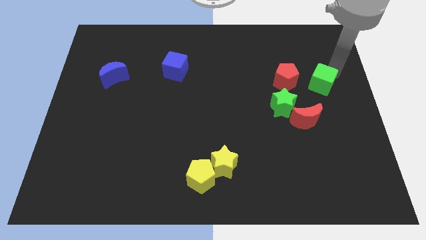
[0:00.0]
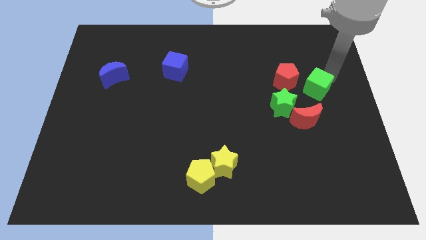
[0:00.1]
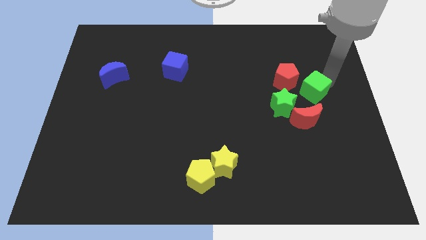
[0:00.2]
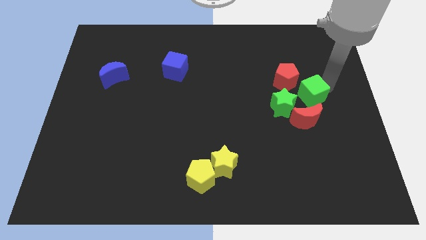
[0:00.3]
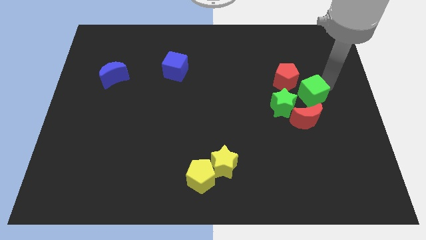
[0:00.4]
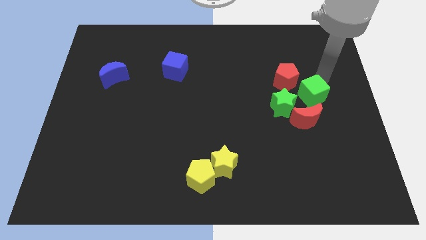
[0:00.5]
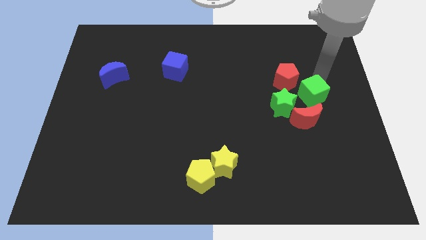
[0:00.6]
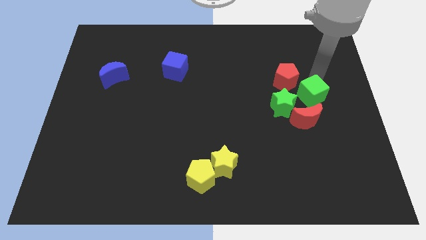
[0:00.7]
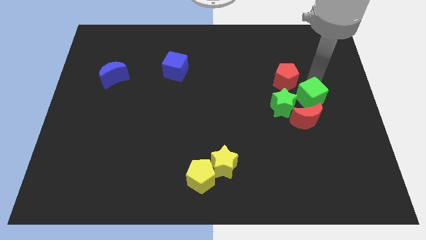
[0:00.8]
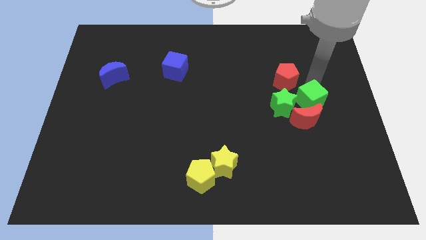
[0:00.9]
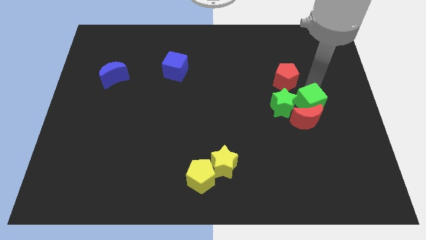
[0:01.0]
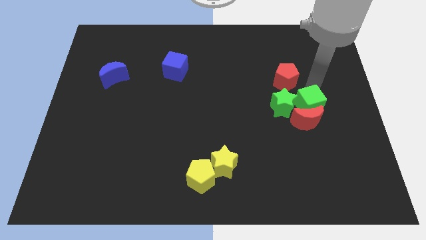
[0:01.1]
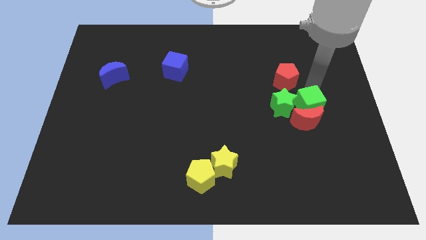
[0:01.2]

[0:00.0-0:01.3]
push the green cube to the right of the green star

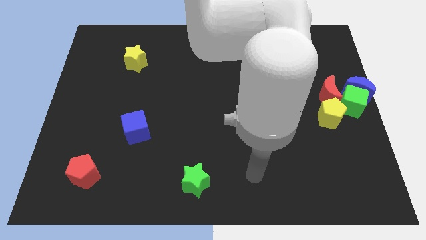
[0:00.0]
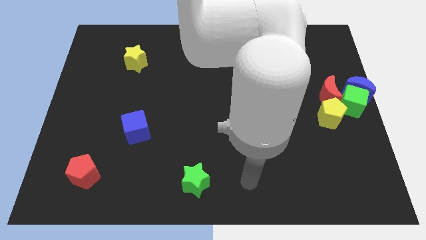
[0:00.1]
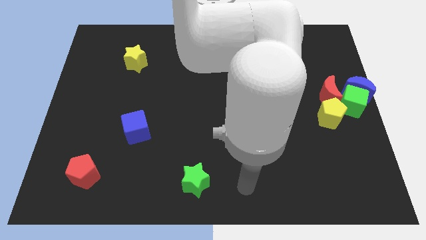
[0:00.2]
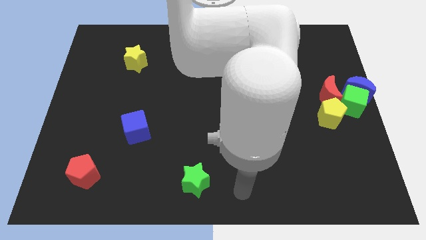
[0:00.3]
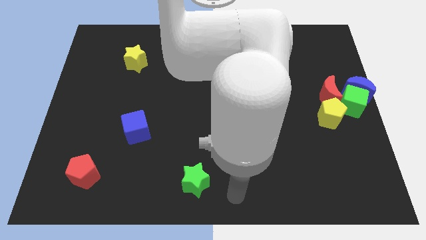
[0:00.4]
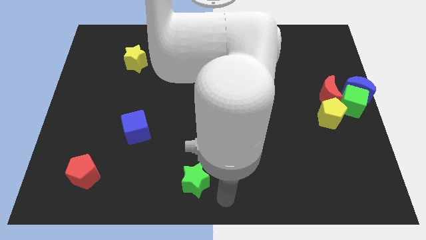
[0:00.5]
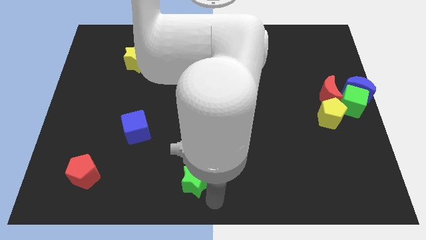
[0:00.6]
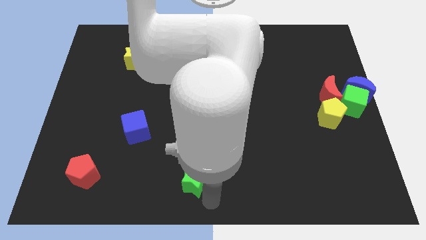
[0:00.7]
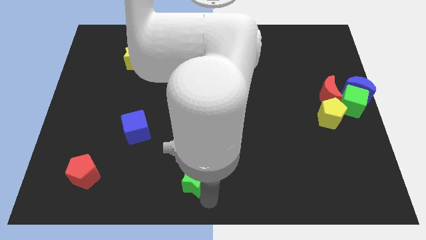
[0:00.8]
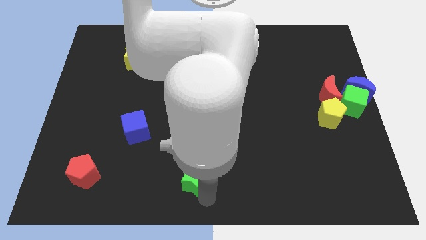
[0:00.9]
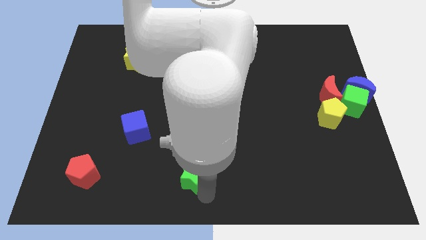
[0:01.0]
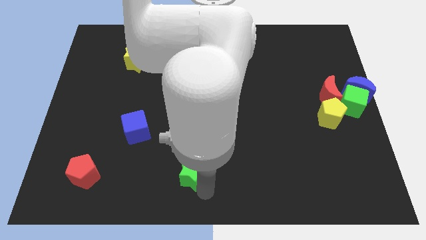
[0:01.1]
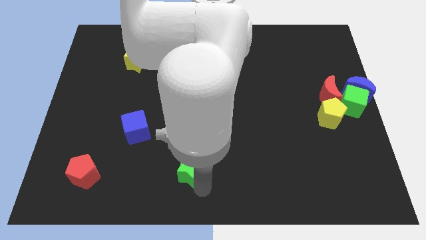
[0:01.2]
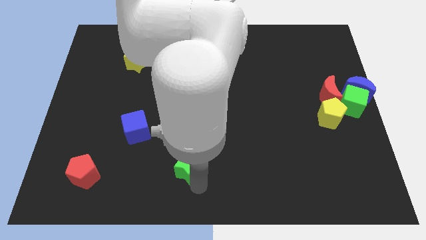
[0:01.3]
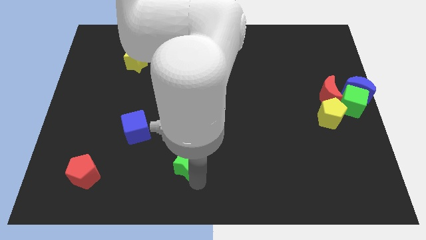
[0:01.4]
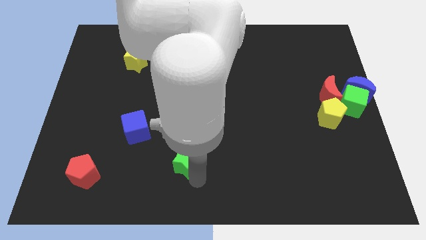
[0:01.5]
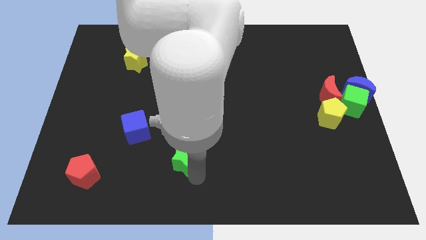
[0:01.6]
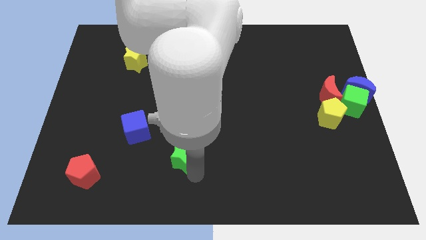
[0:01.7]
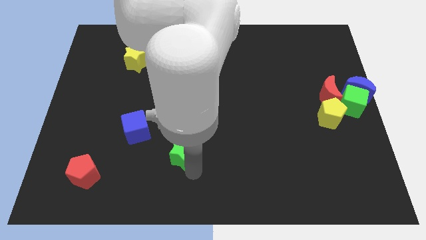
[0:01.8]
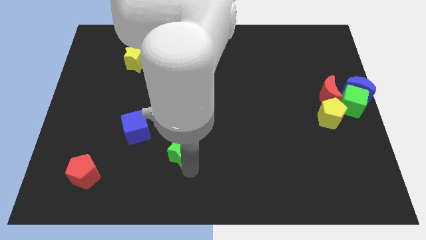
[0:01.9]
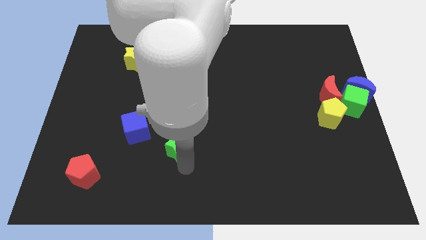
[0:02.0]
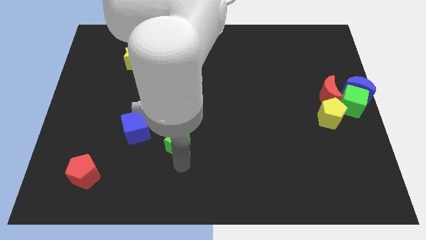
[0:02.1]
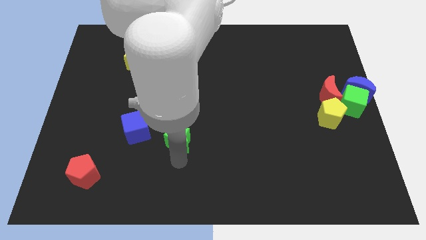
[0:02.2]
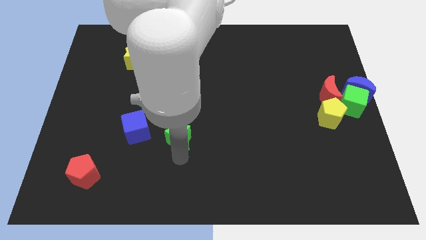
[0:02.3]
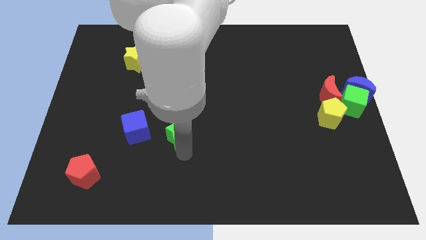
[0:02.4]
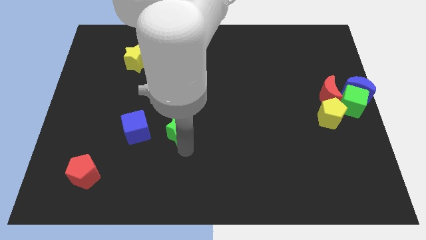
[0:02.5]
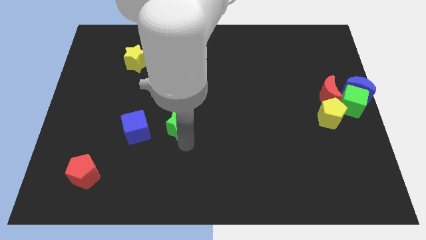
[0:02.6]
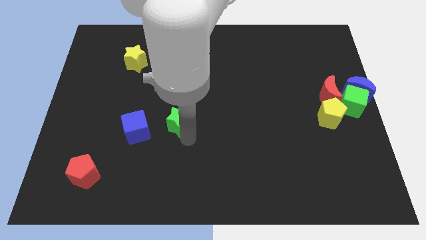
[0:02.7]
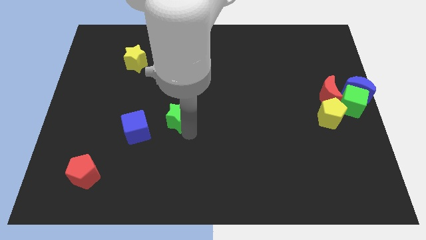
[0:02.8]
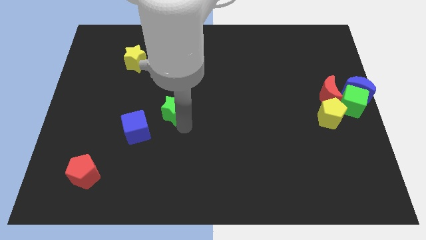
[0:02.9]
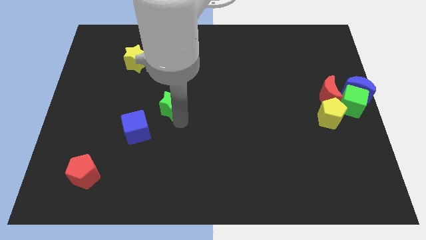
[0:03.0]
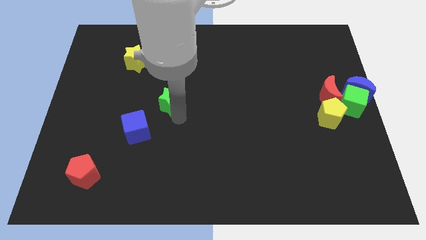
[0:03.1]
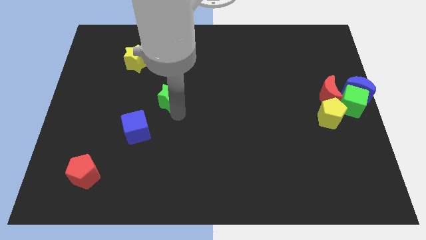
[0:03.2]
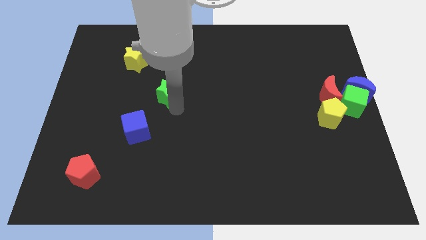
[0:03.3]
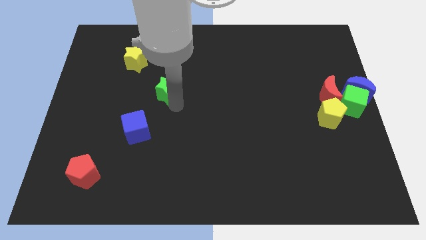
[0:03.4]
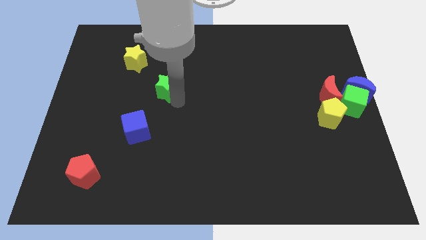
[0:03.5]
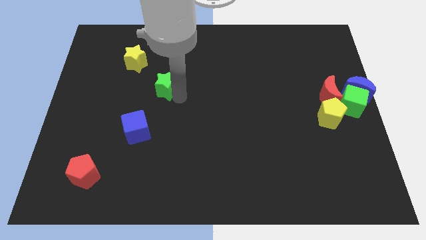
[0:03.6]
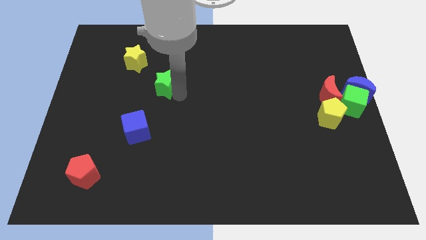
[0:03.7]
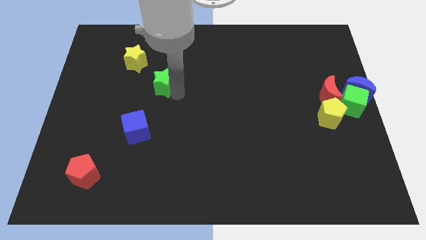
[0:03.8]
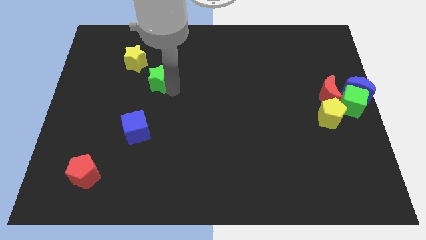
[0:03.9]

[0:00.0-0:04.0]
push the green star diagonally bottom right to the yellow star

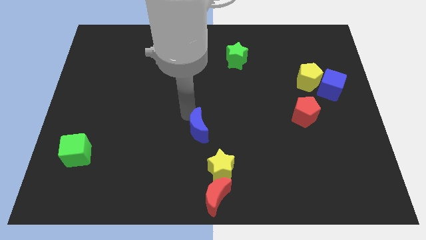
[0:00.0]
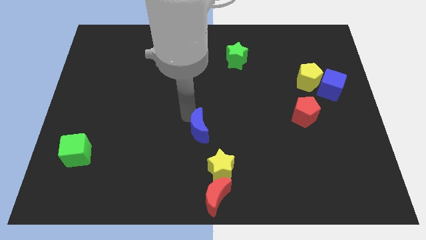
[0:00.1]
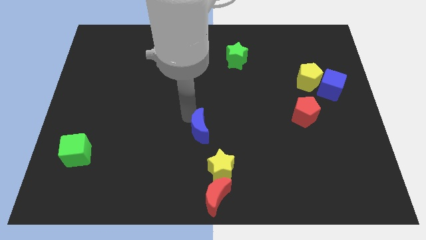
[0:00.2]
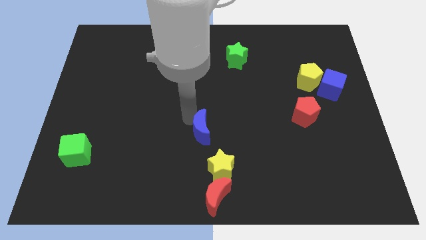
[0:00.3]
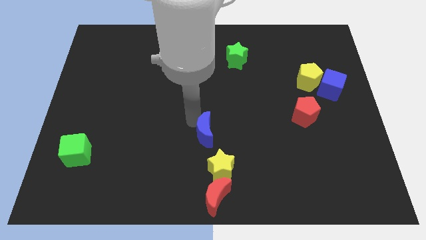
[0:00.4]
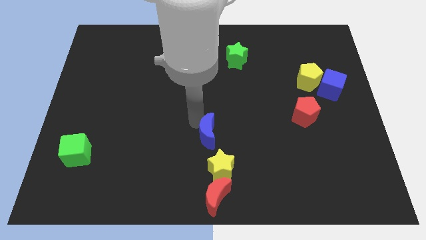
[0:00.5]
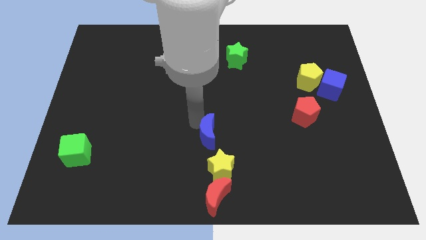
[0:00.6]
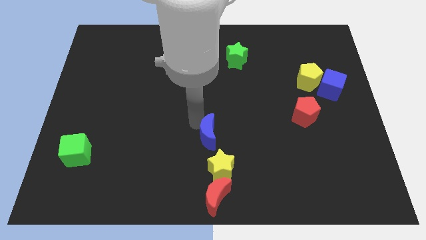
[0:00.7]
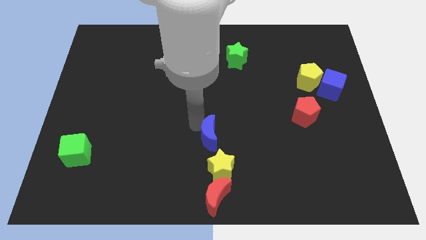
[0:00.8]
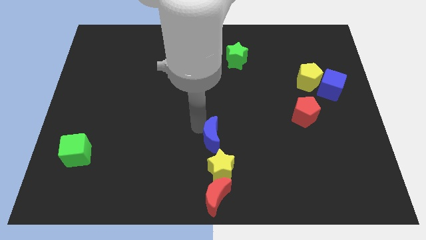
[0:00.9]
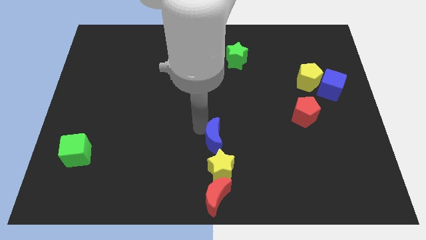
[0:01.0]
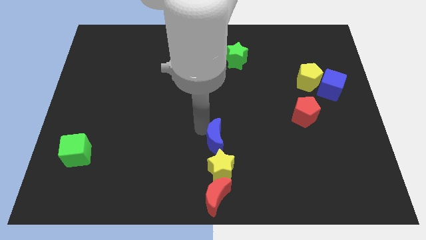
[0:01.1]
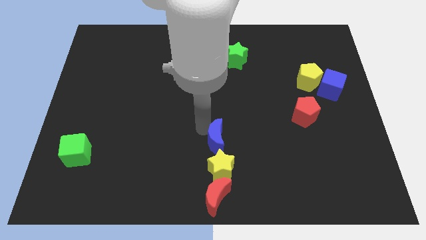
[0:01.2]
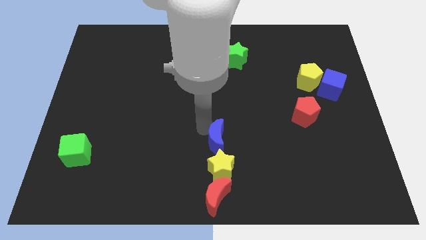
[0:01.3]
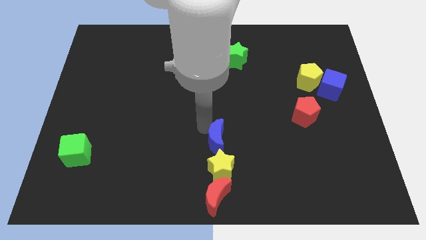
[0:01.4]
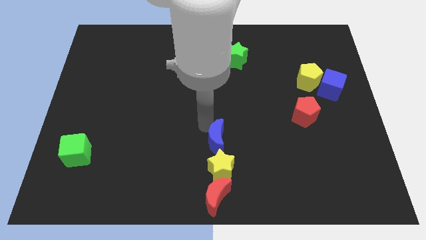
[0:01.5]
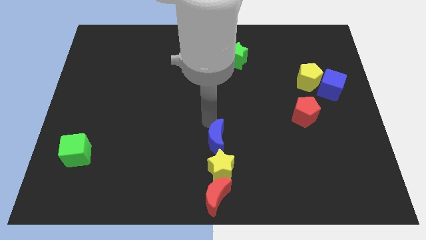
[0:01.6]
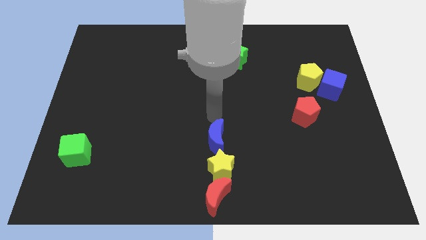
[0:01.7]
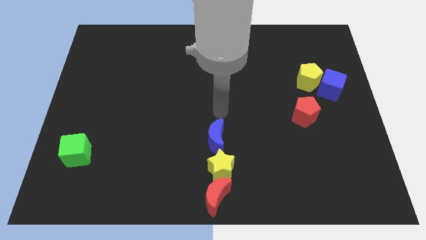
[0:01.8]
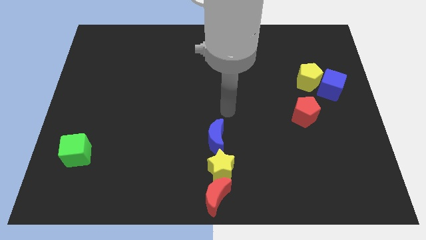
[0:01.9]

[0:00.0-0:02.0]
move the blue crescent above the yellow star

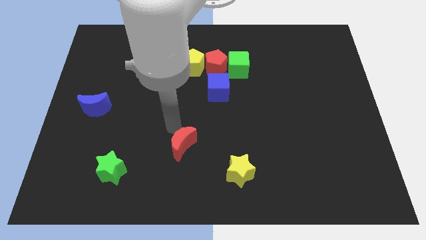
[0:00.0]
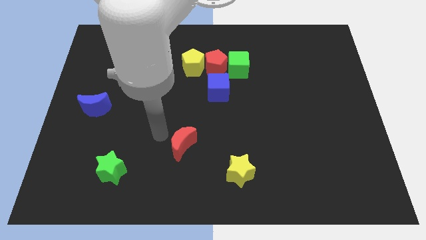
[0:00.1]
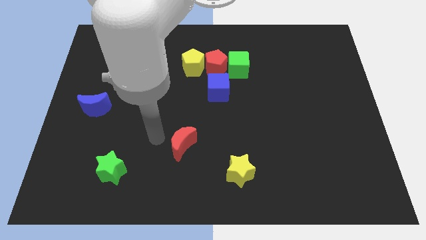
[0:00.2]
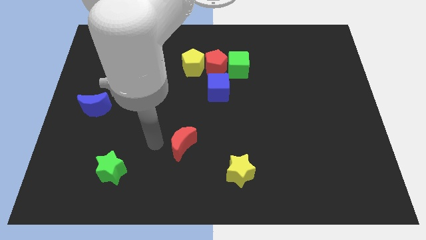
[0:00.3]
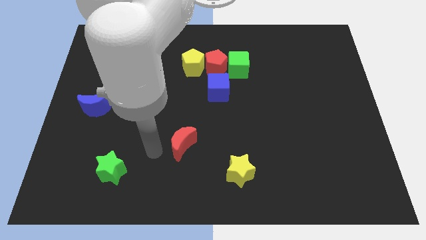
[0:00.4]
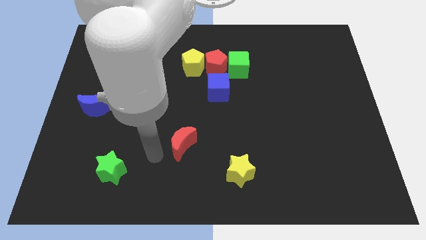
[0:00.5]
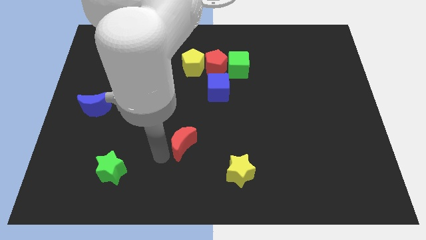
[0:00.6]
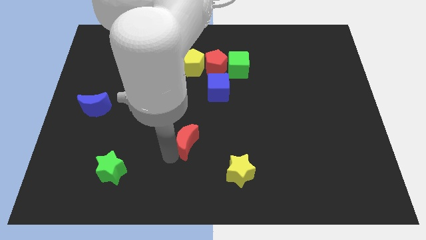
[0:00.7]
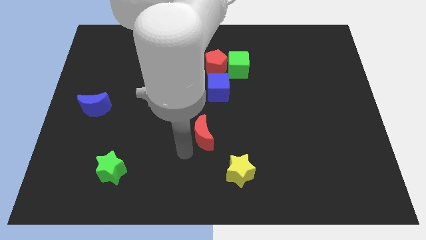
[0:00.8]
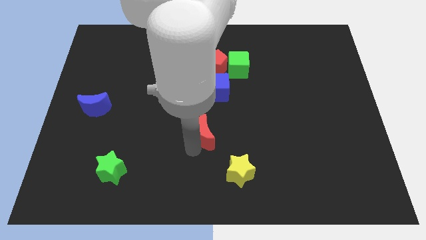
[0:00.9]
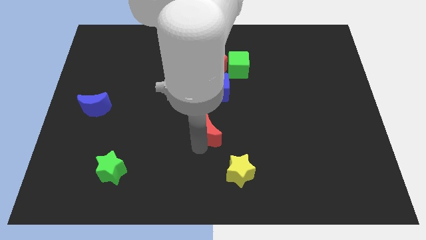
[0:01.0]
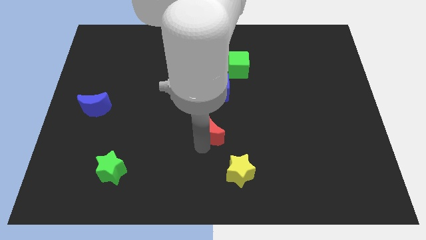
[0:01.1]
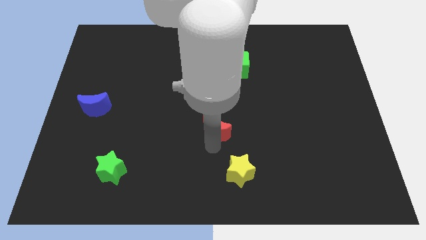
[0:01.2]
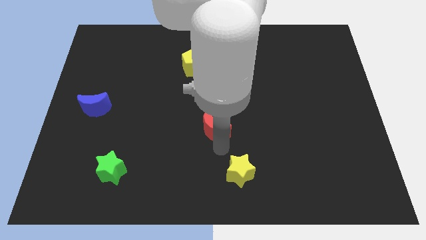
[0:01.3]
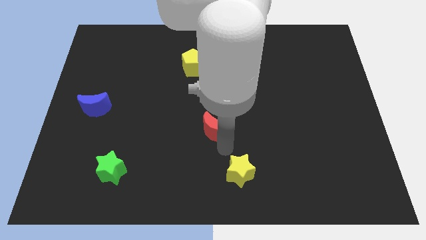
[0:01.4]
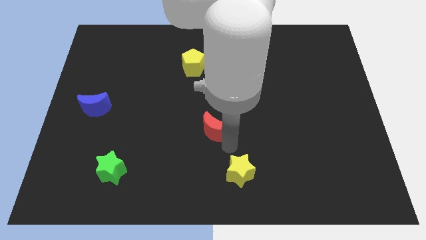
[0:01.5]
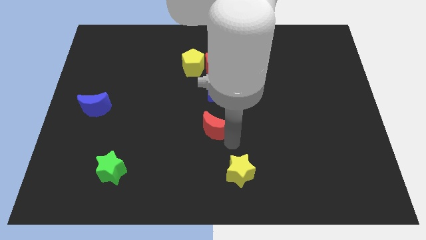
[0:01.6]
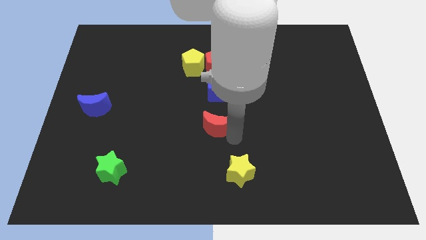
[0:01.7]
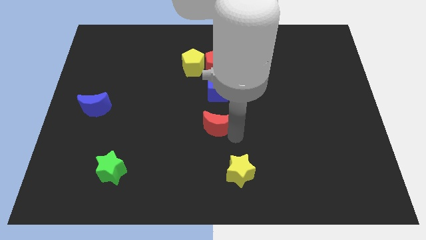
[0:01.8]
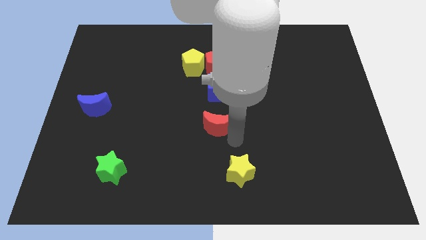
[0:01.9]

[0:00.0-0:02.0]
move the red crescent diagonally on the top left side of the yellow star
